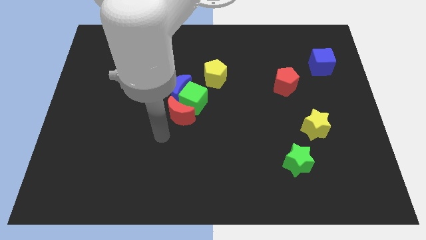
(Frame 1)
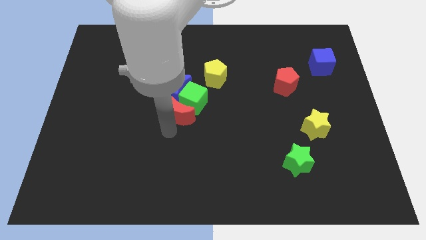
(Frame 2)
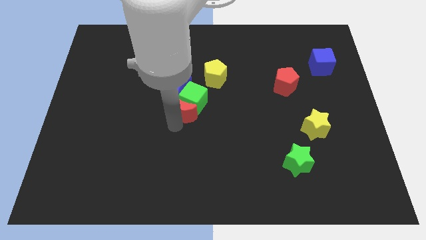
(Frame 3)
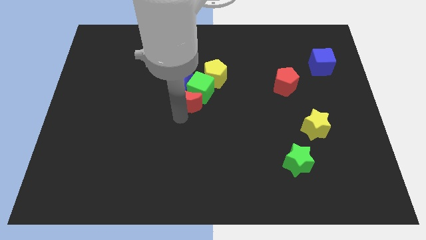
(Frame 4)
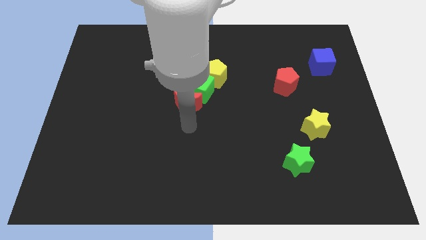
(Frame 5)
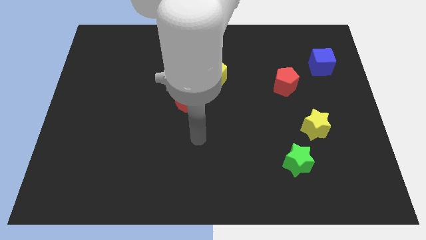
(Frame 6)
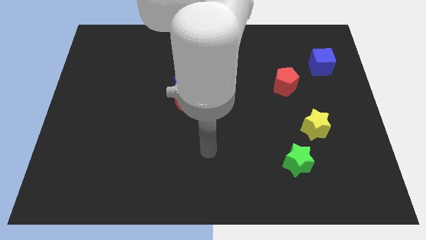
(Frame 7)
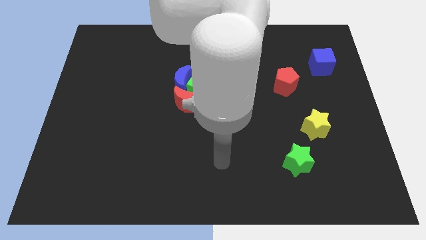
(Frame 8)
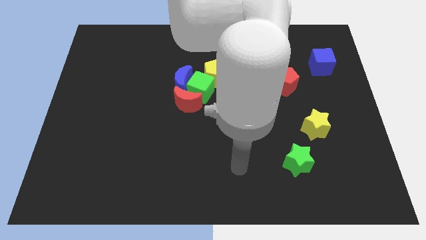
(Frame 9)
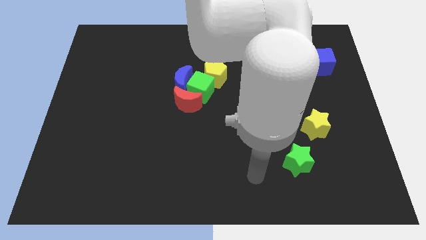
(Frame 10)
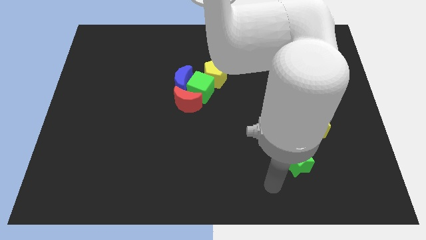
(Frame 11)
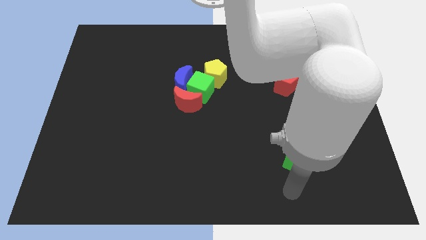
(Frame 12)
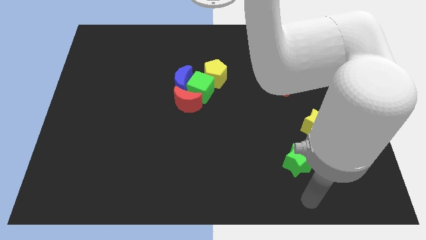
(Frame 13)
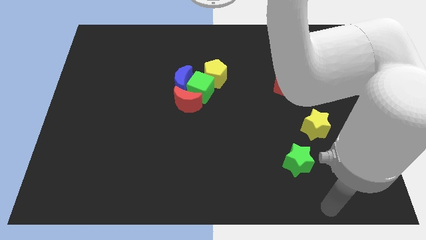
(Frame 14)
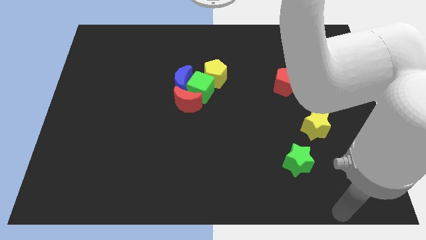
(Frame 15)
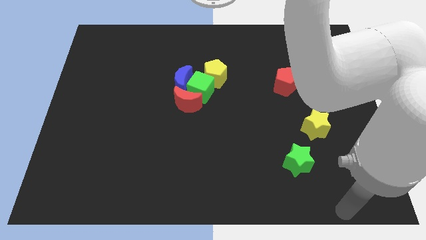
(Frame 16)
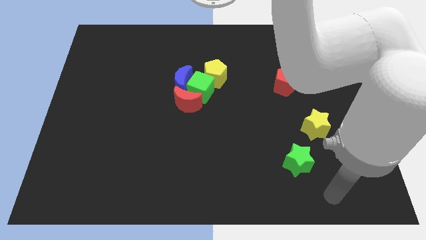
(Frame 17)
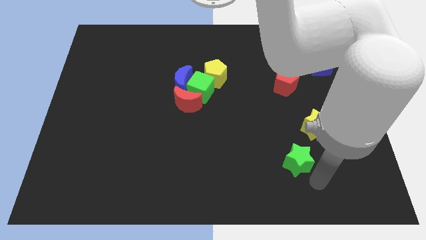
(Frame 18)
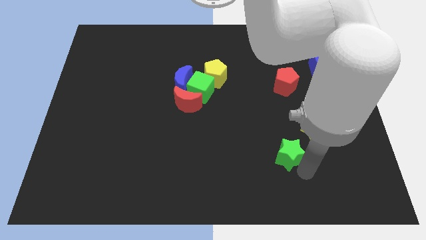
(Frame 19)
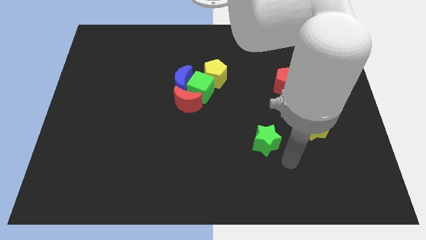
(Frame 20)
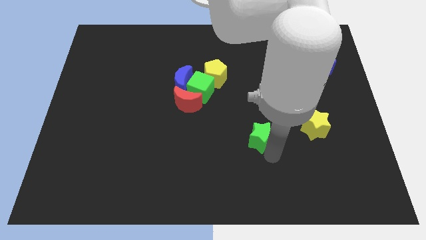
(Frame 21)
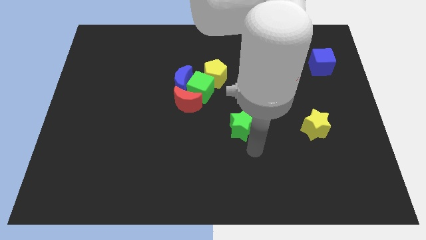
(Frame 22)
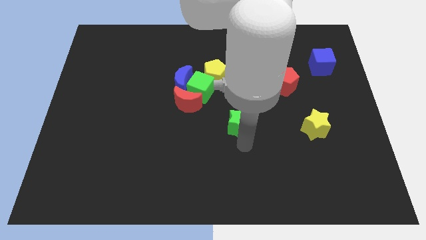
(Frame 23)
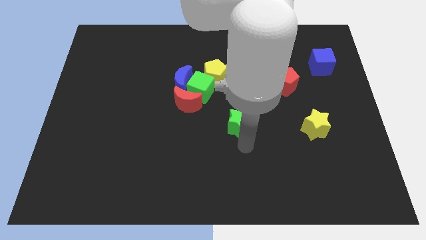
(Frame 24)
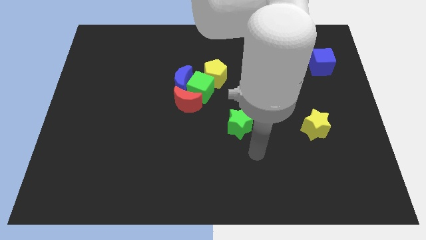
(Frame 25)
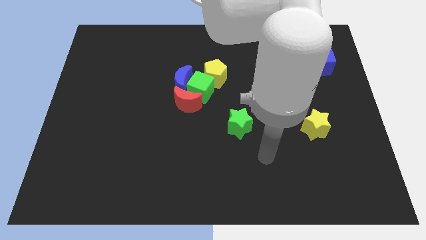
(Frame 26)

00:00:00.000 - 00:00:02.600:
push the green star towards the centre of the board

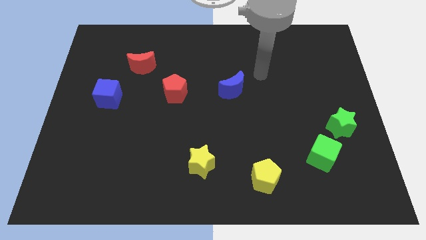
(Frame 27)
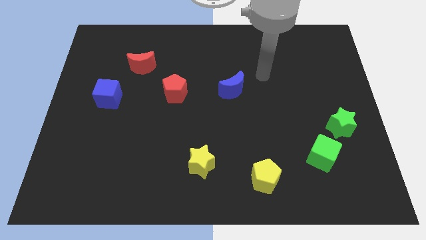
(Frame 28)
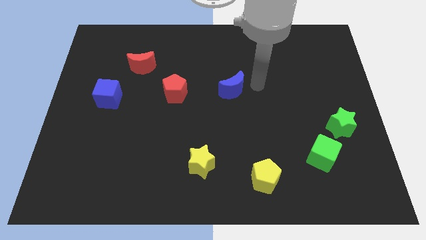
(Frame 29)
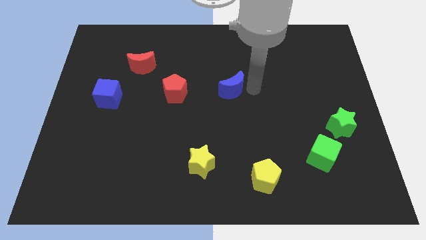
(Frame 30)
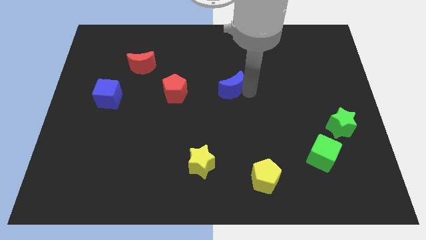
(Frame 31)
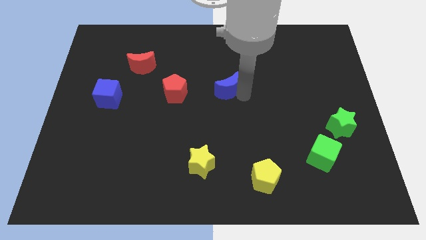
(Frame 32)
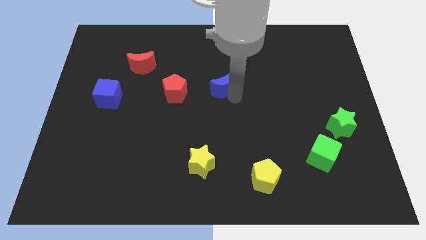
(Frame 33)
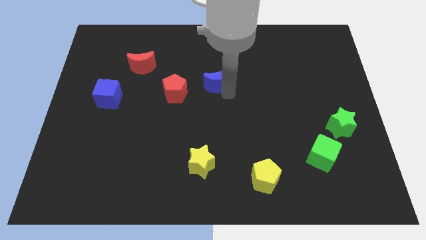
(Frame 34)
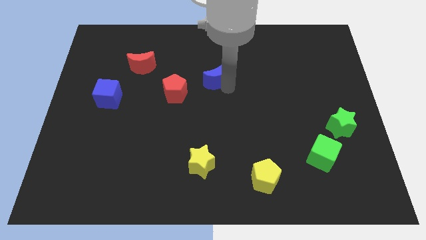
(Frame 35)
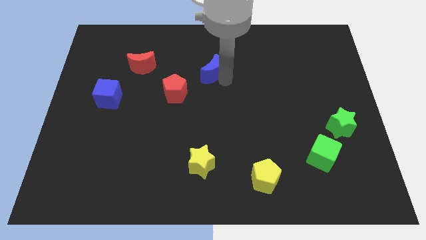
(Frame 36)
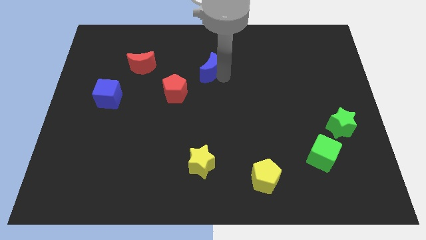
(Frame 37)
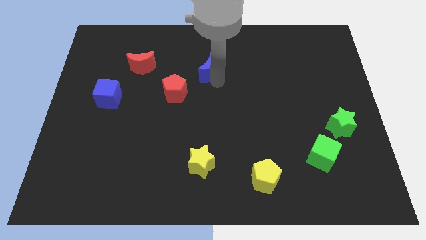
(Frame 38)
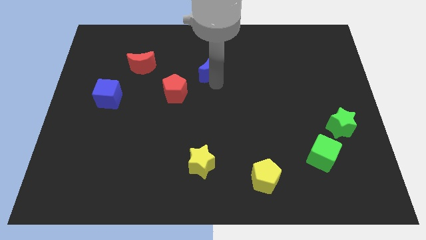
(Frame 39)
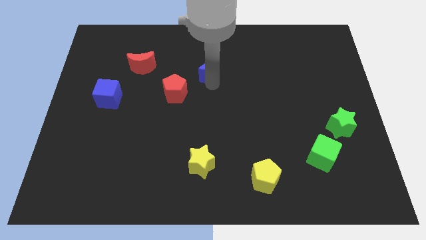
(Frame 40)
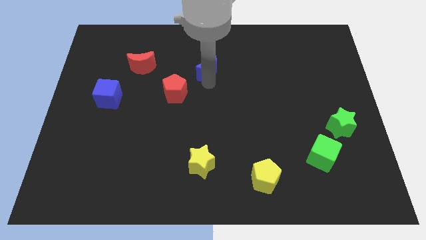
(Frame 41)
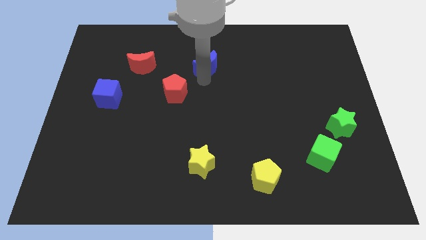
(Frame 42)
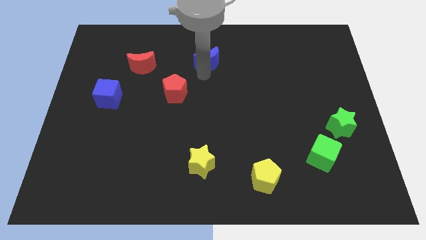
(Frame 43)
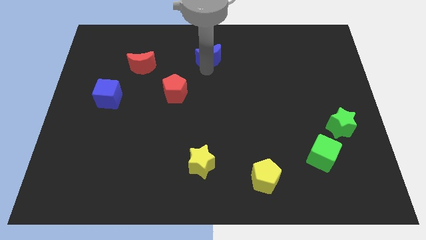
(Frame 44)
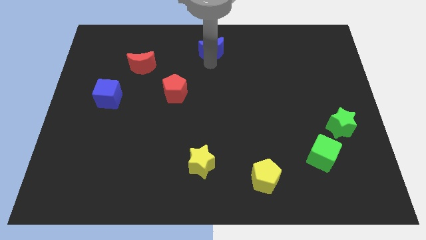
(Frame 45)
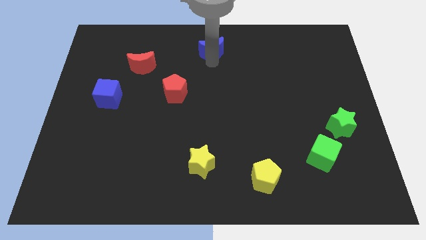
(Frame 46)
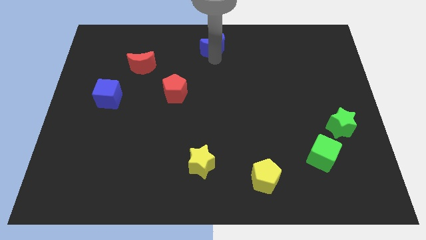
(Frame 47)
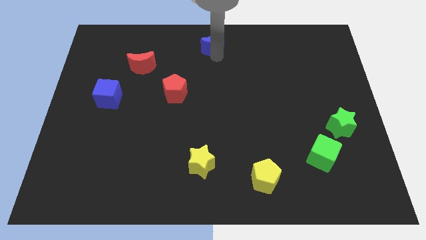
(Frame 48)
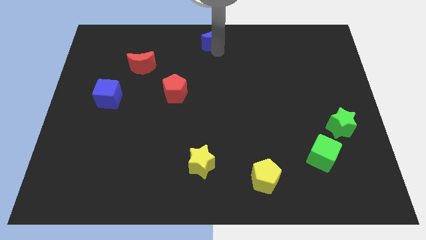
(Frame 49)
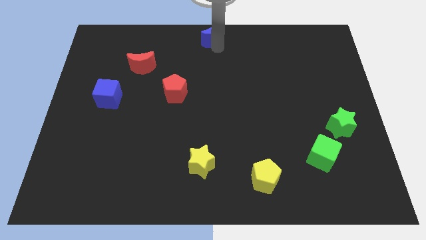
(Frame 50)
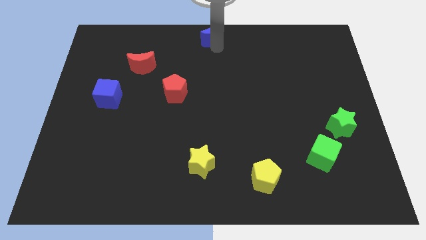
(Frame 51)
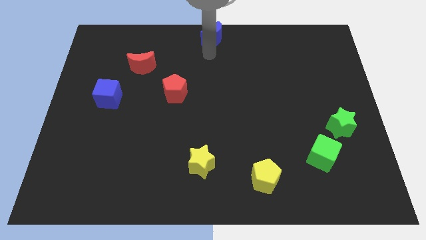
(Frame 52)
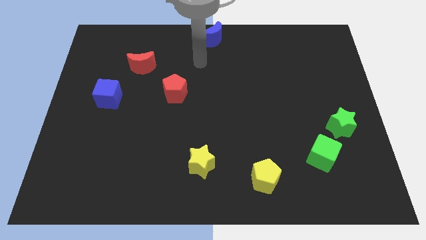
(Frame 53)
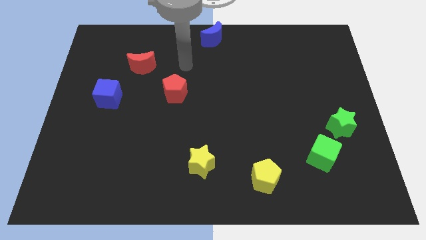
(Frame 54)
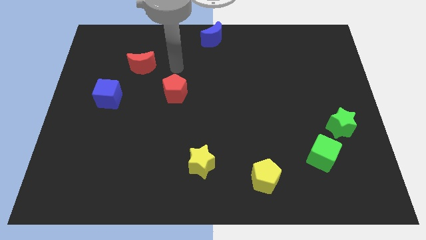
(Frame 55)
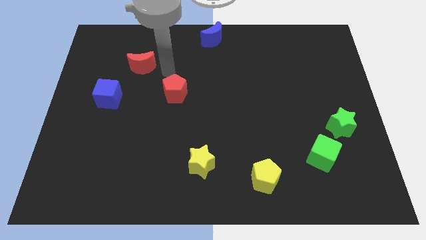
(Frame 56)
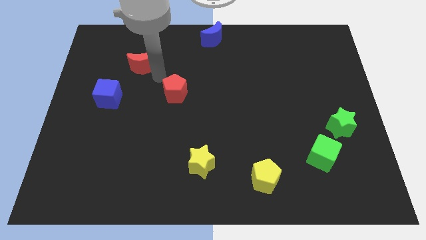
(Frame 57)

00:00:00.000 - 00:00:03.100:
place blue crescent towards top middle end of the board

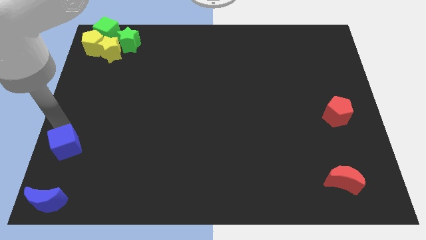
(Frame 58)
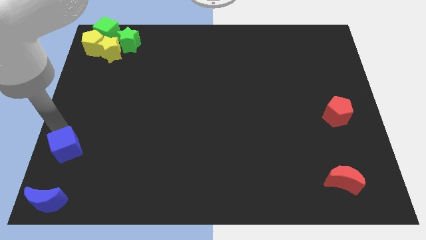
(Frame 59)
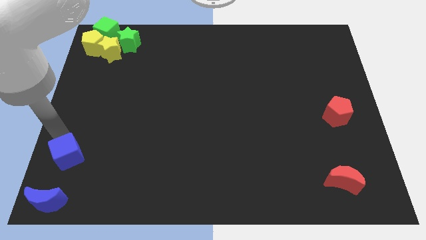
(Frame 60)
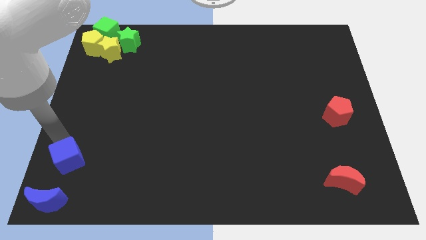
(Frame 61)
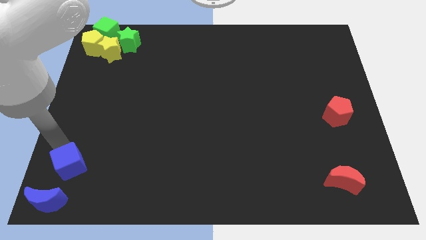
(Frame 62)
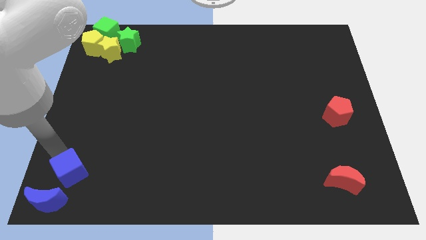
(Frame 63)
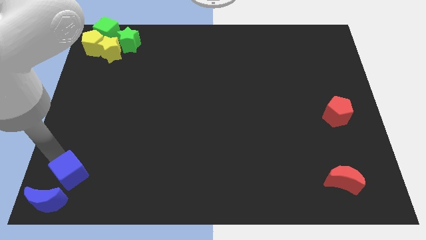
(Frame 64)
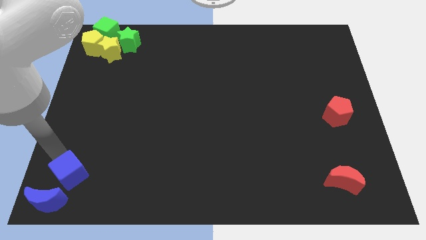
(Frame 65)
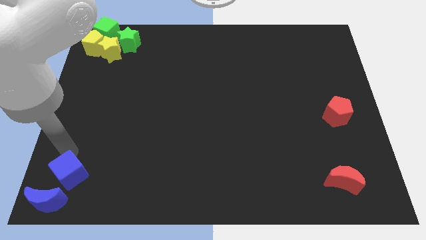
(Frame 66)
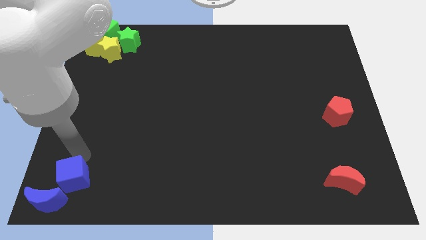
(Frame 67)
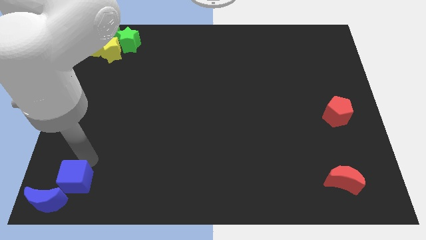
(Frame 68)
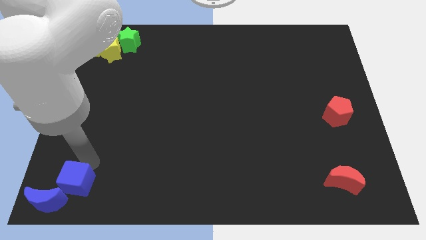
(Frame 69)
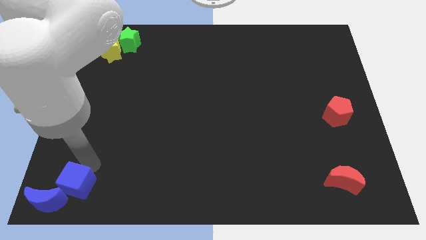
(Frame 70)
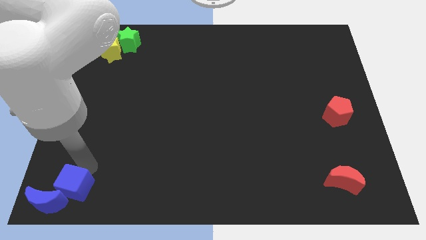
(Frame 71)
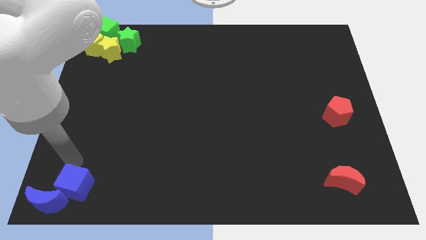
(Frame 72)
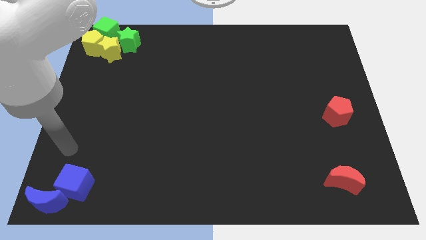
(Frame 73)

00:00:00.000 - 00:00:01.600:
move the blue cube above the blue crescent

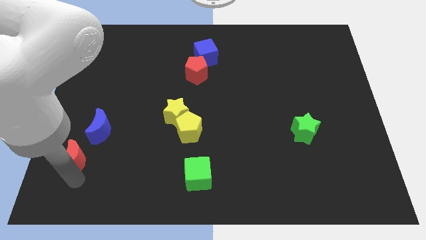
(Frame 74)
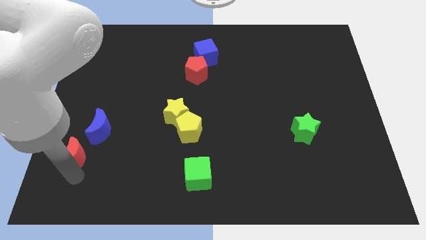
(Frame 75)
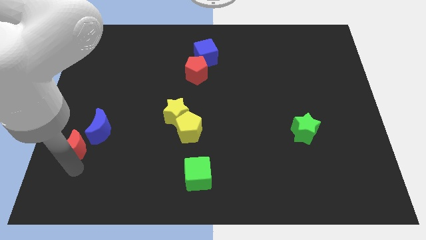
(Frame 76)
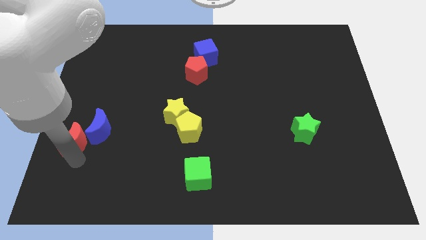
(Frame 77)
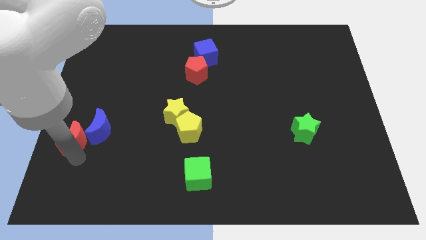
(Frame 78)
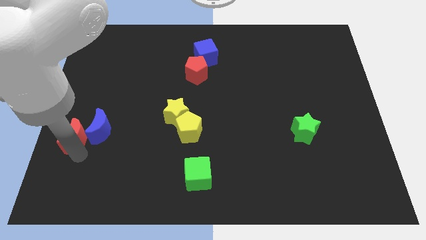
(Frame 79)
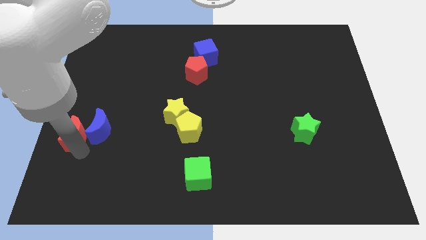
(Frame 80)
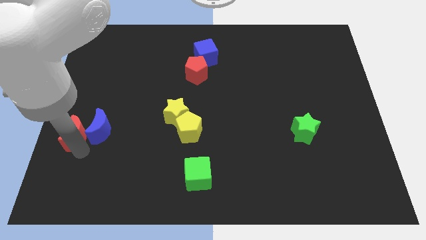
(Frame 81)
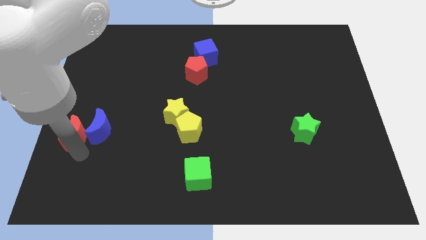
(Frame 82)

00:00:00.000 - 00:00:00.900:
move the red moon close to the blue moon

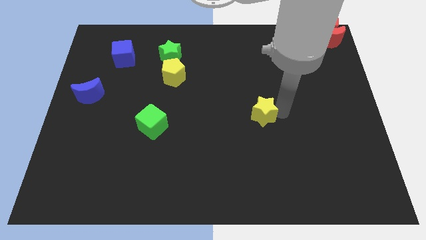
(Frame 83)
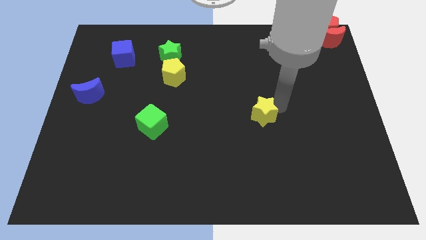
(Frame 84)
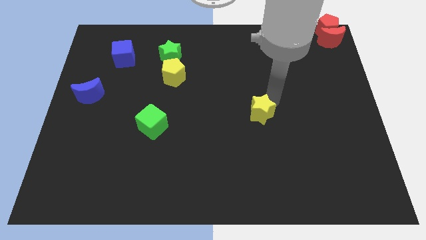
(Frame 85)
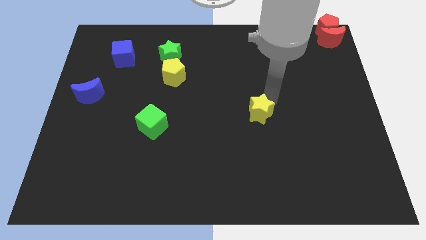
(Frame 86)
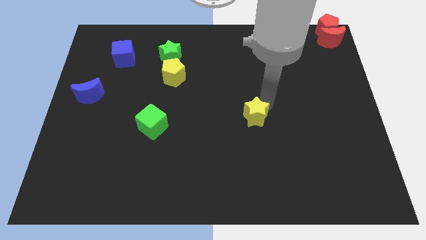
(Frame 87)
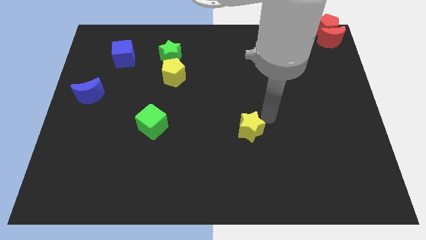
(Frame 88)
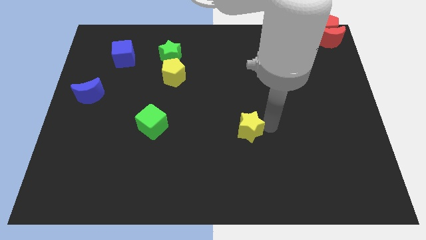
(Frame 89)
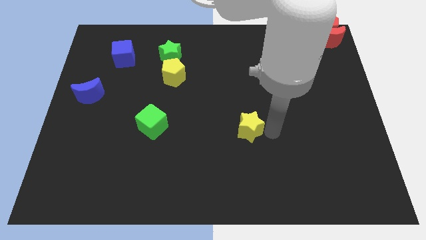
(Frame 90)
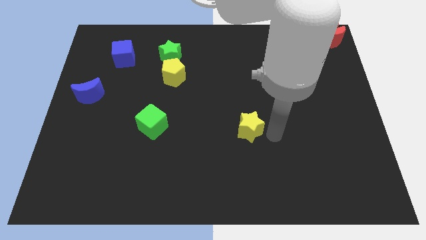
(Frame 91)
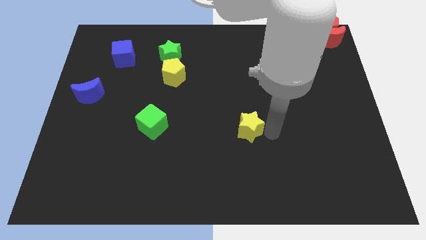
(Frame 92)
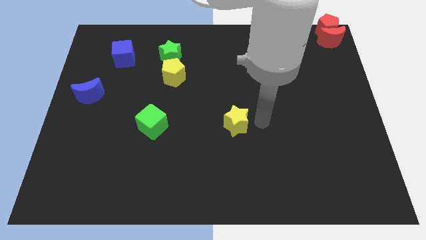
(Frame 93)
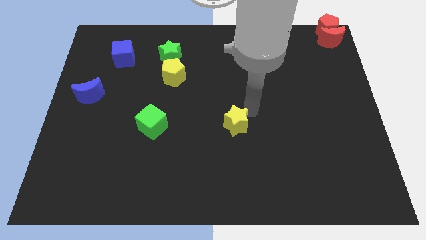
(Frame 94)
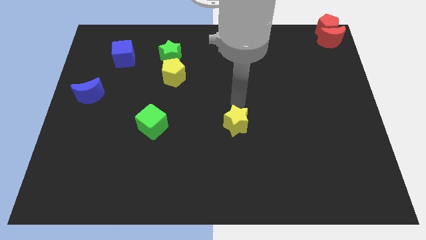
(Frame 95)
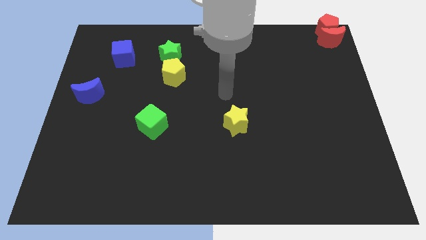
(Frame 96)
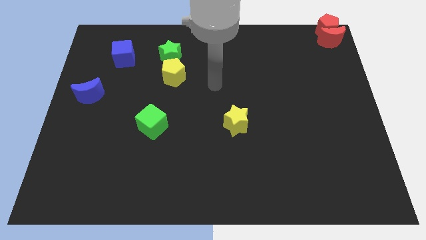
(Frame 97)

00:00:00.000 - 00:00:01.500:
move the arm to the center of the board
